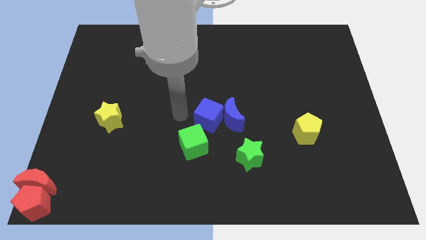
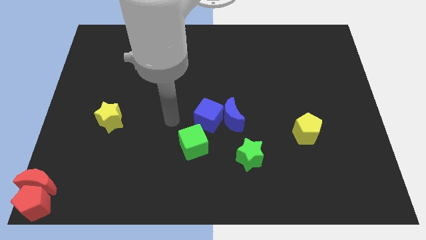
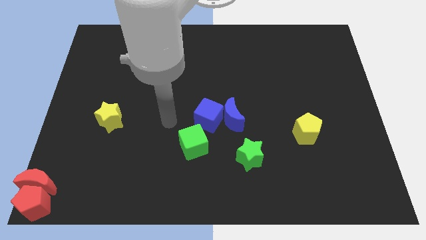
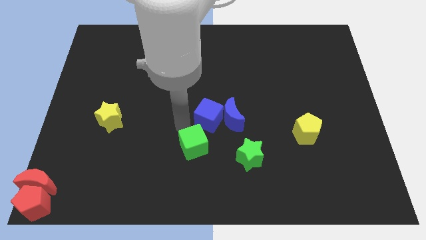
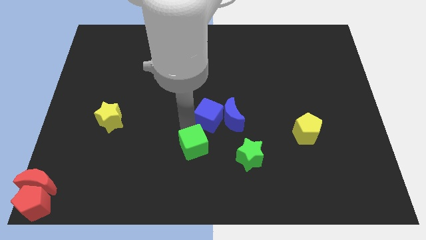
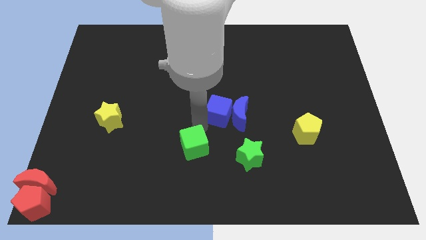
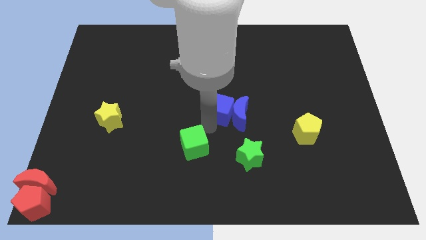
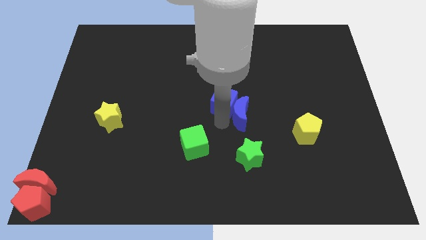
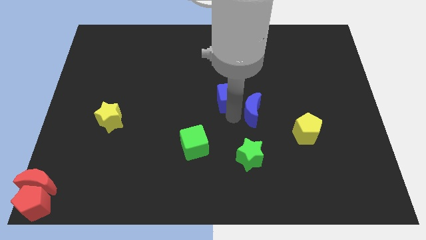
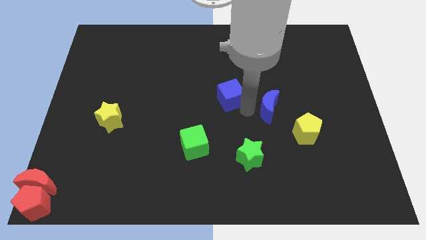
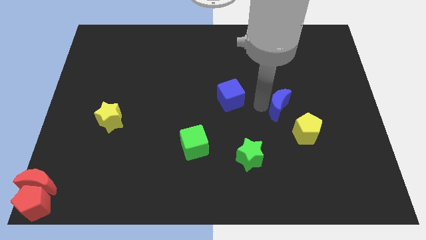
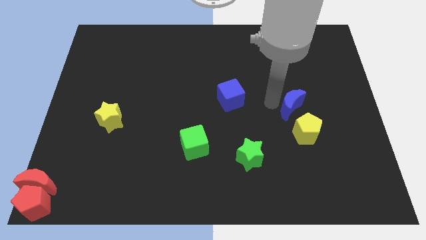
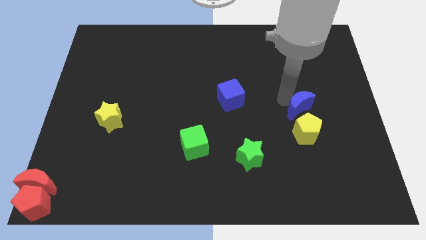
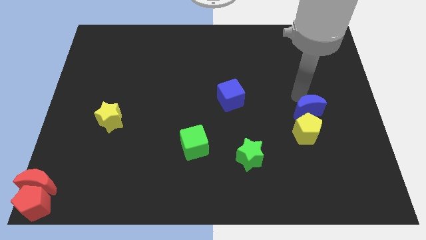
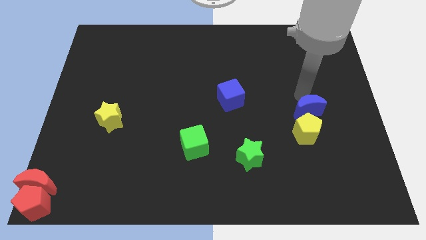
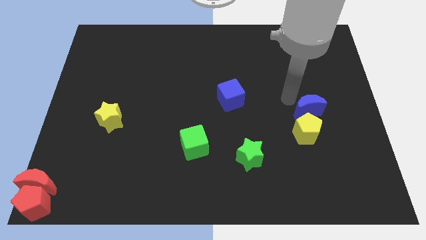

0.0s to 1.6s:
place the blue moon above the yellow pentagon

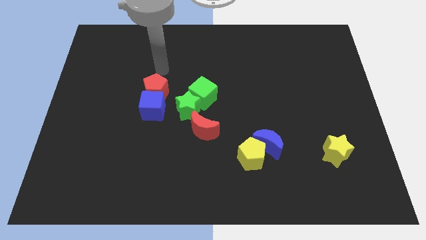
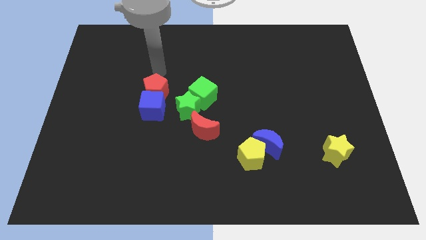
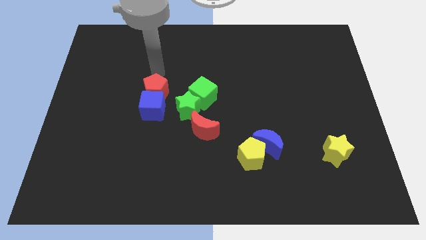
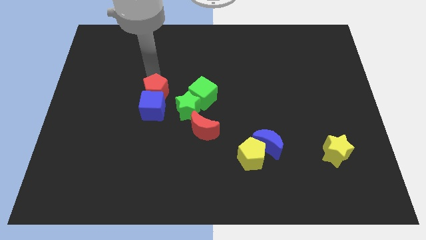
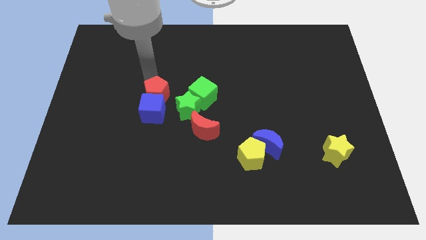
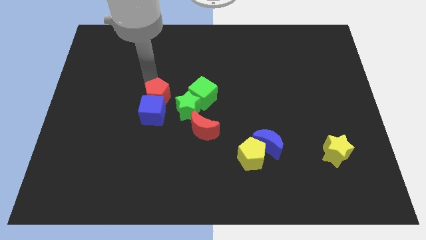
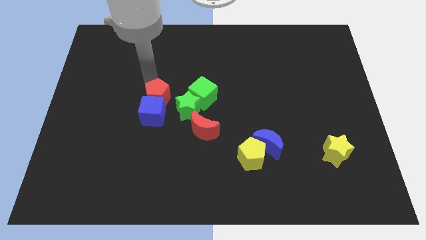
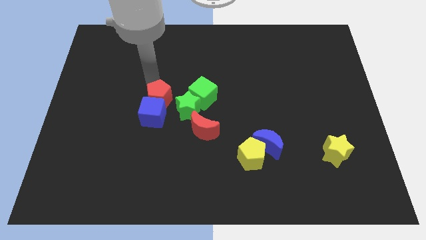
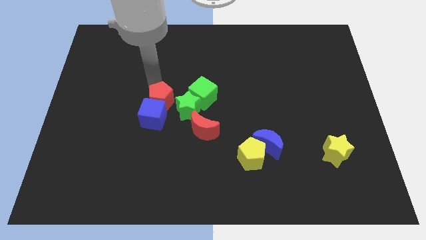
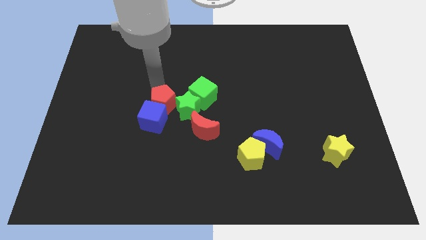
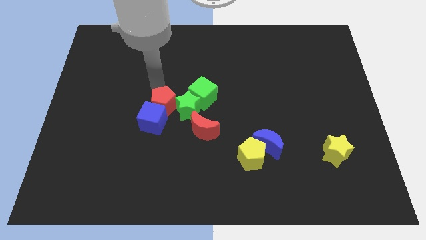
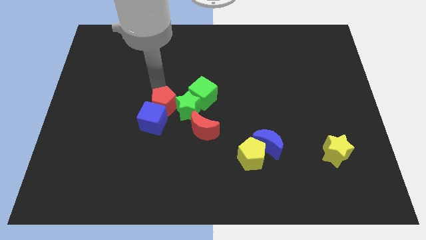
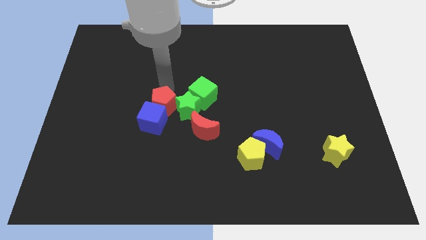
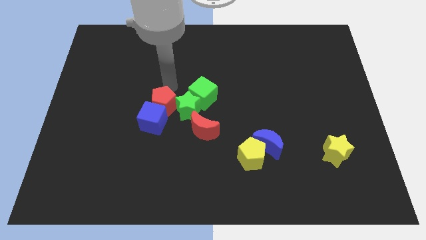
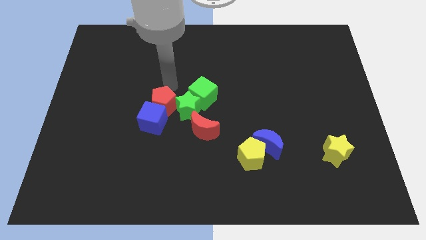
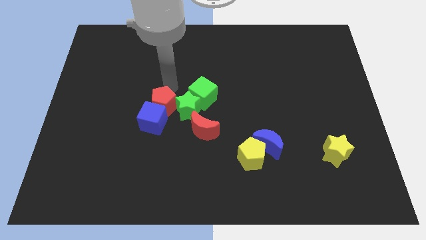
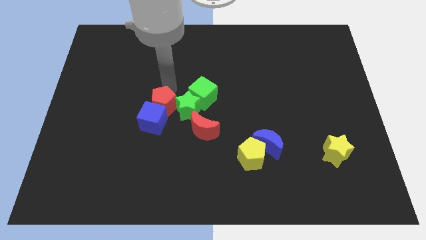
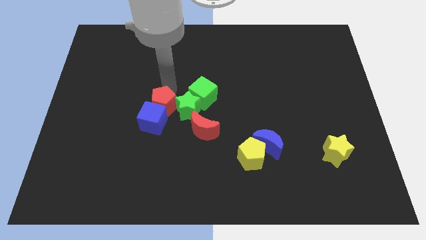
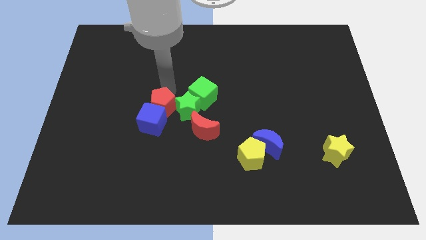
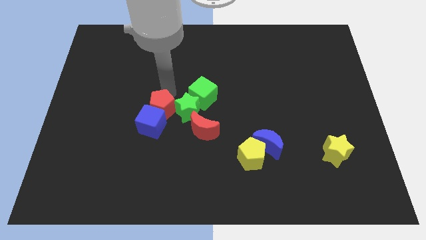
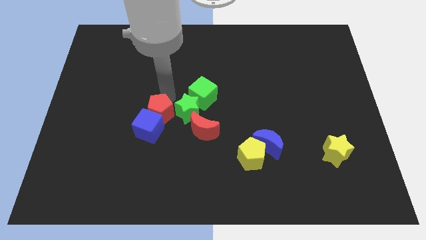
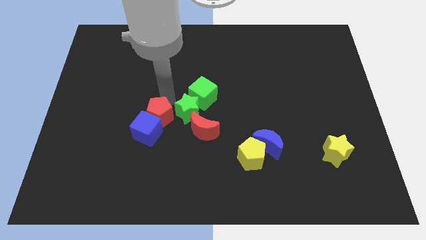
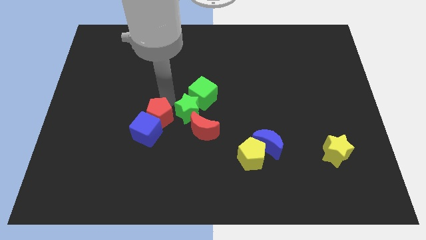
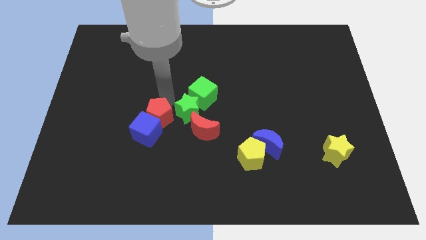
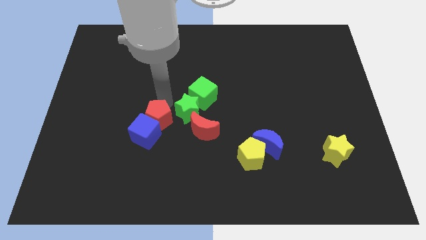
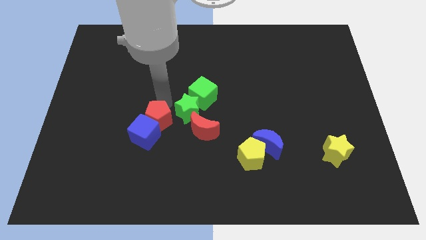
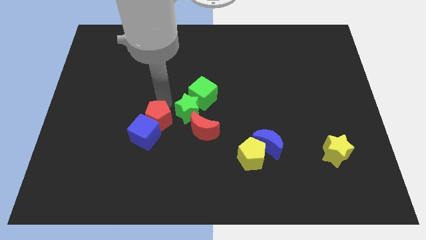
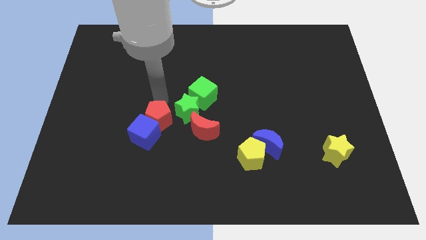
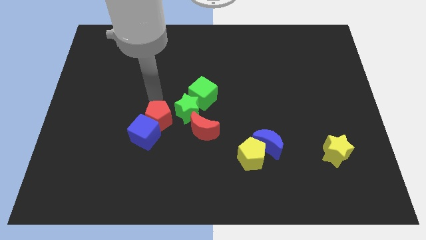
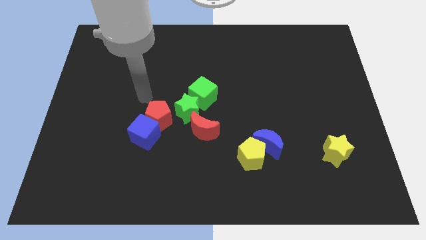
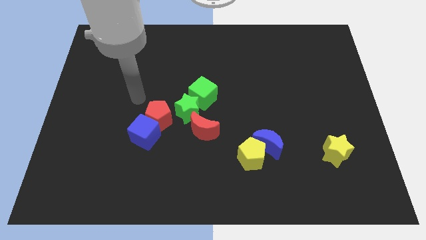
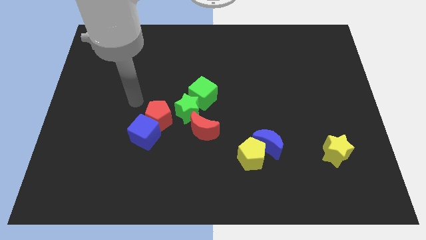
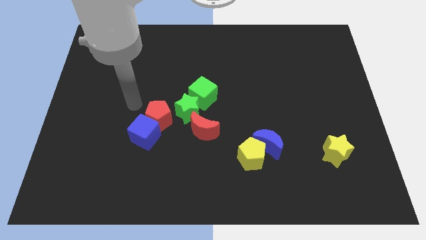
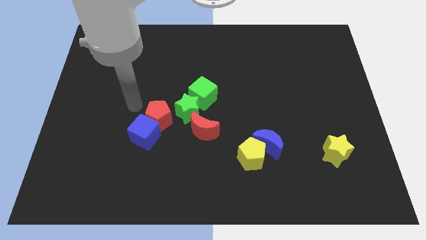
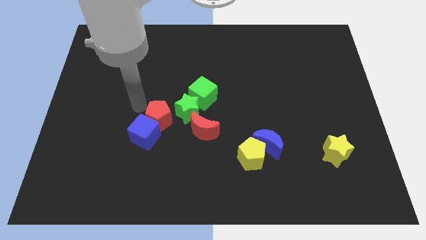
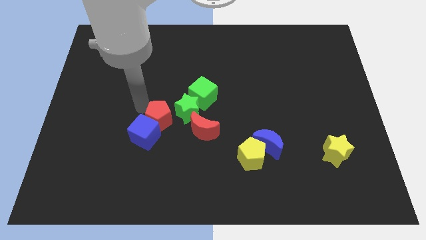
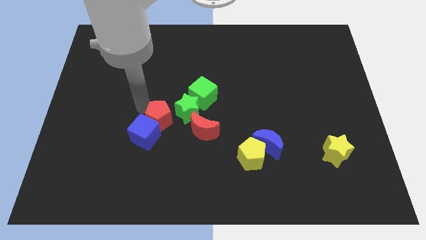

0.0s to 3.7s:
push the red pentagon and blue cube to the bottom

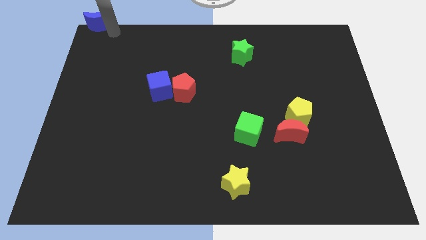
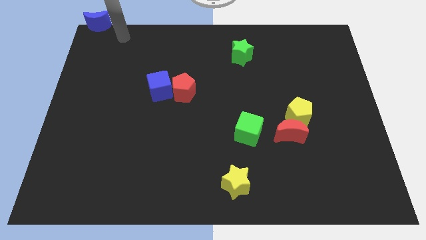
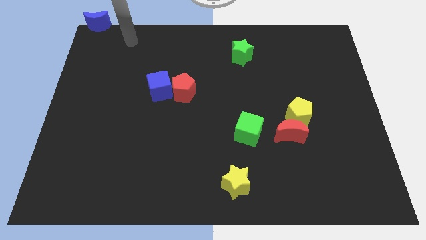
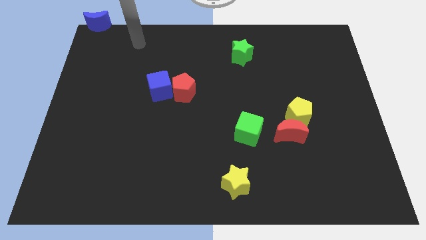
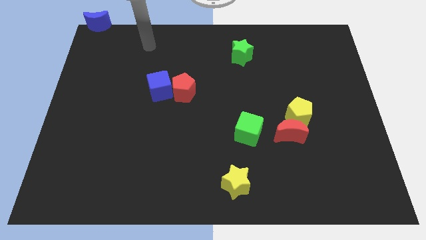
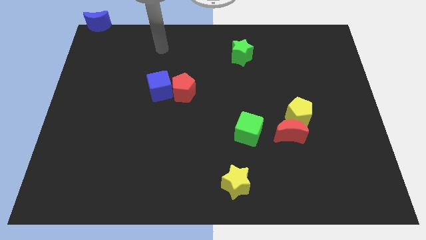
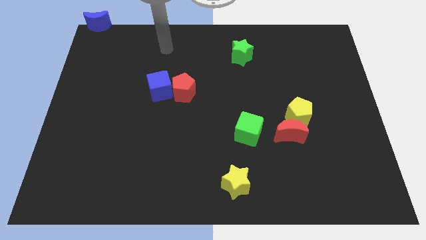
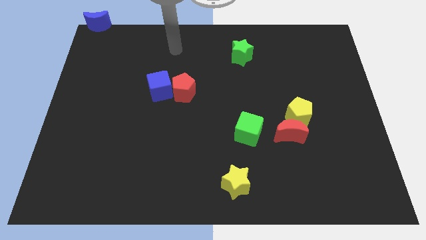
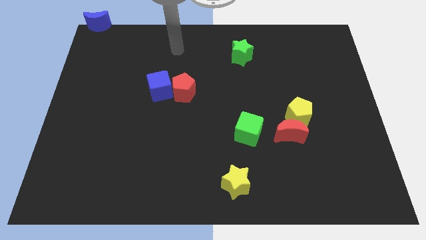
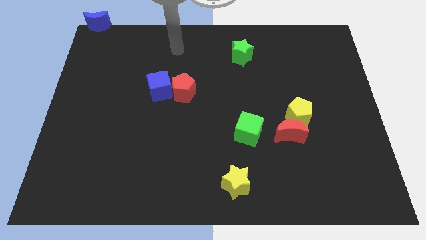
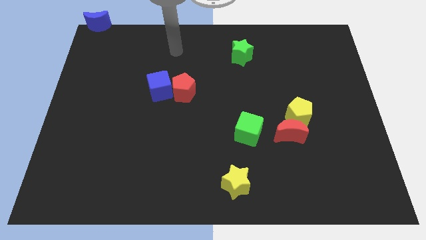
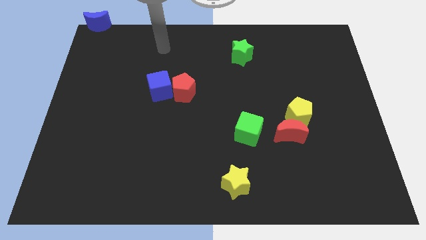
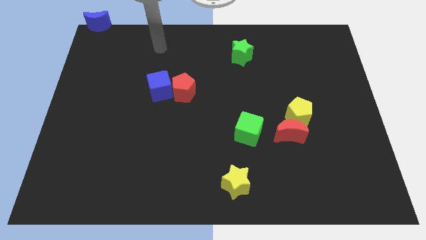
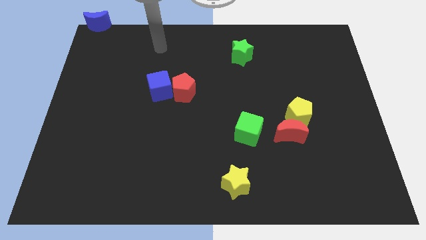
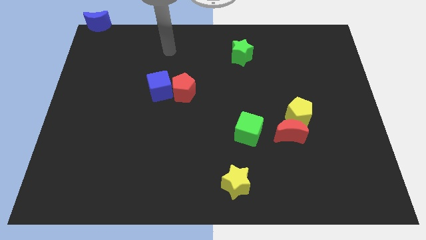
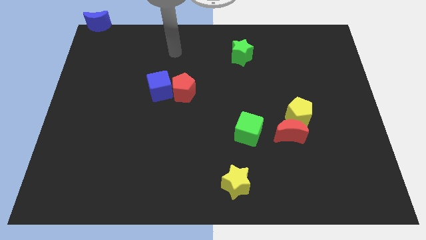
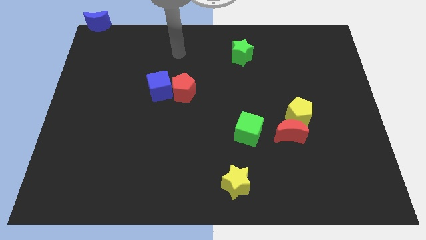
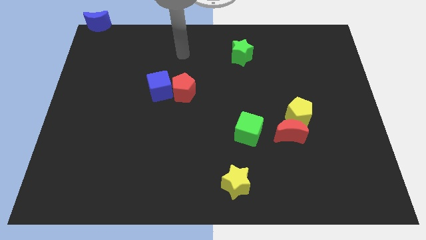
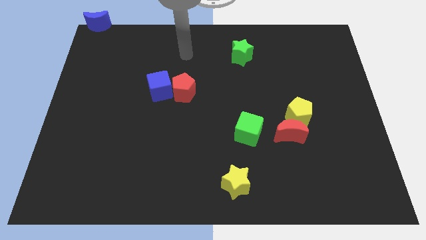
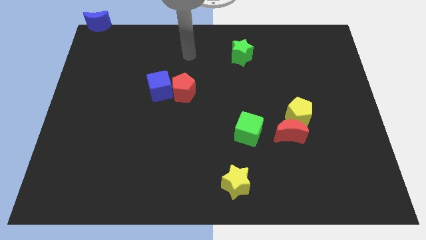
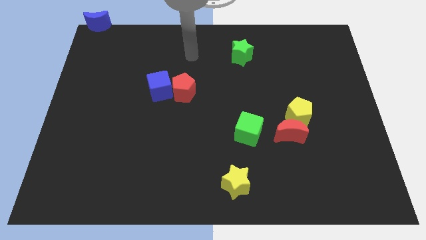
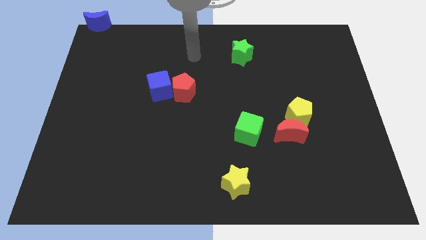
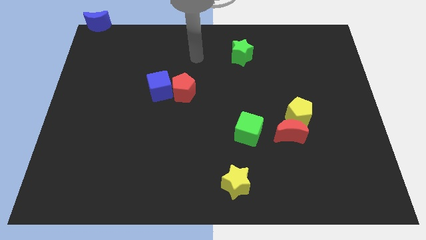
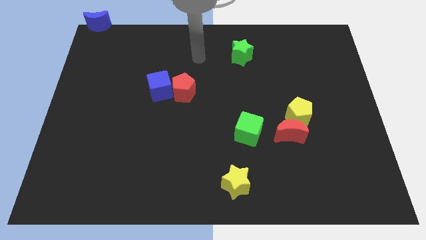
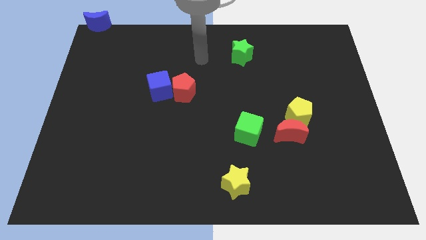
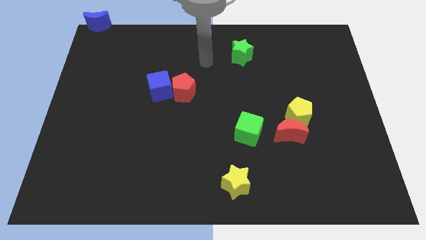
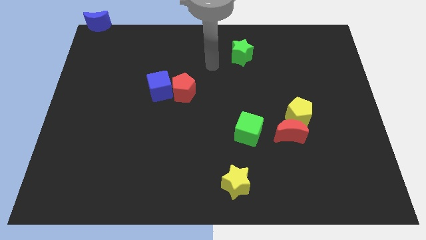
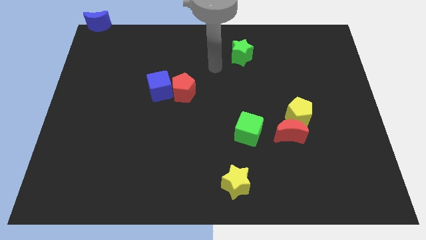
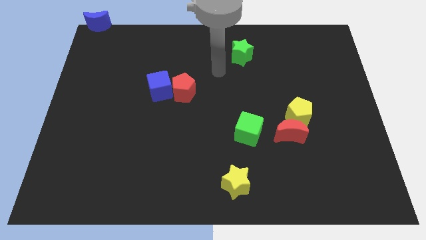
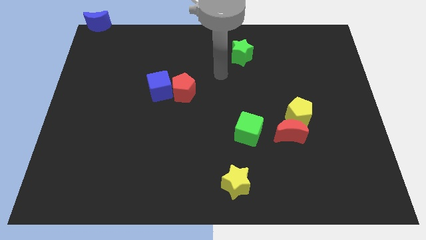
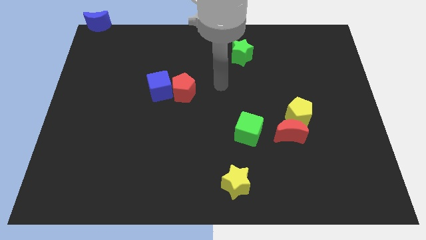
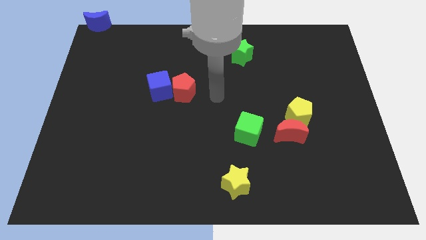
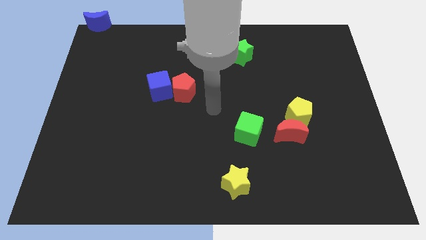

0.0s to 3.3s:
move your arm to the center of board

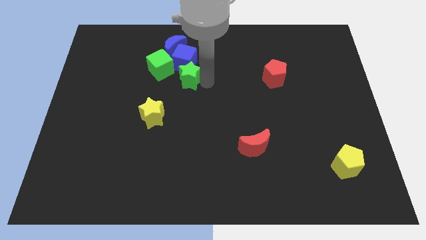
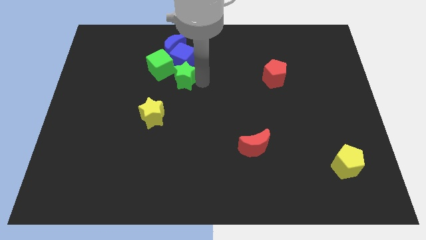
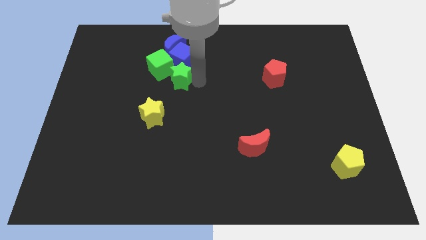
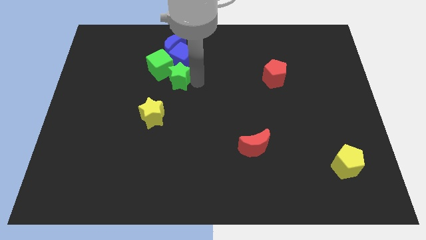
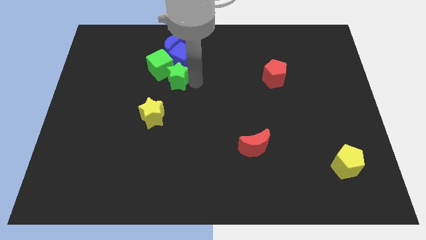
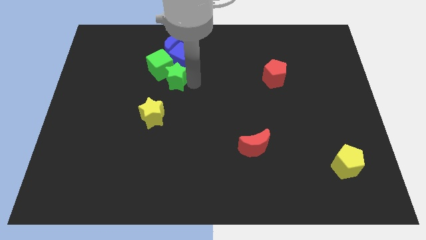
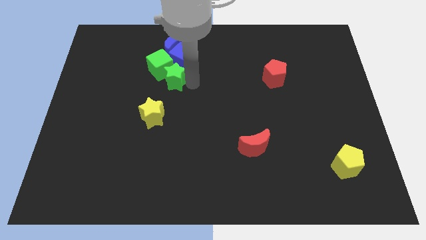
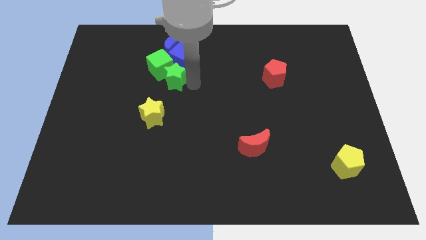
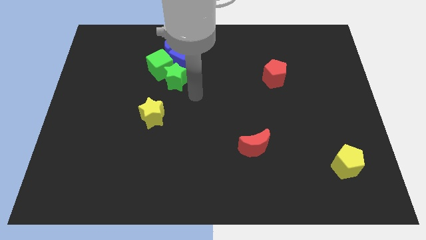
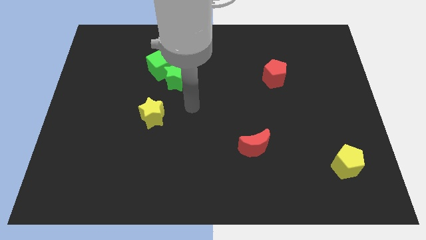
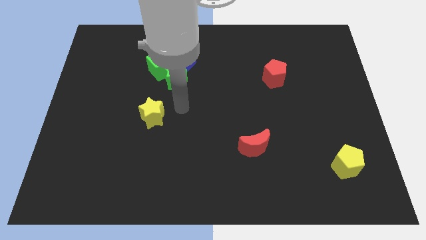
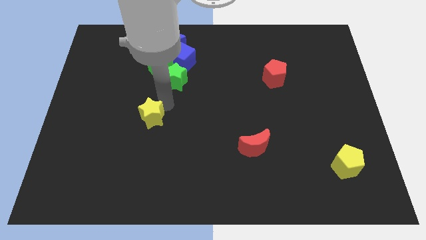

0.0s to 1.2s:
push the green star close to the green cube
